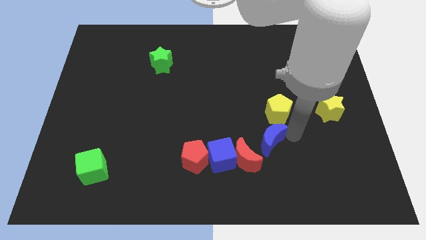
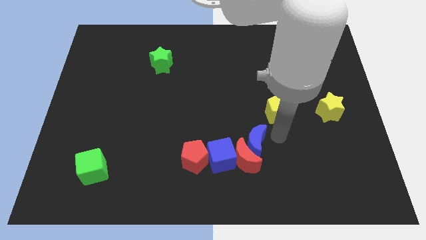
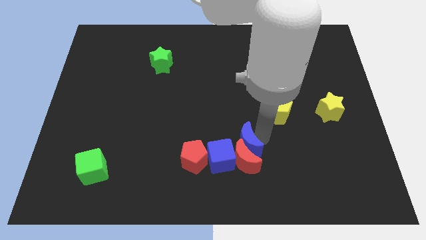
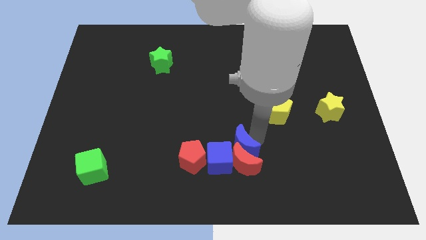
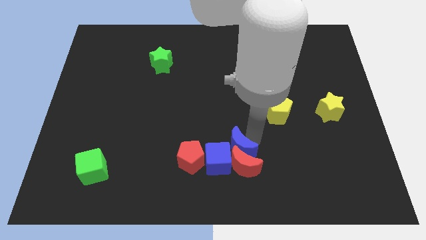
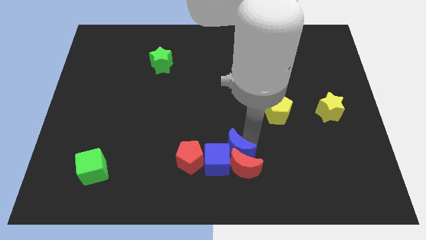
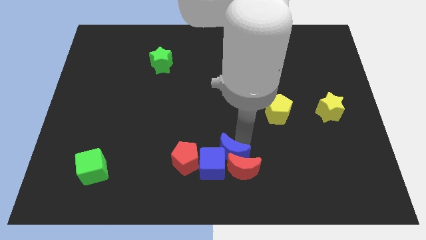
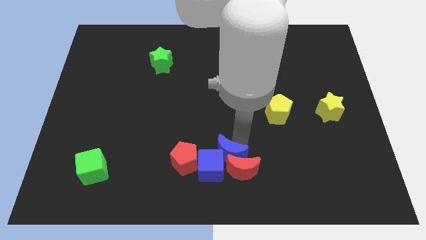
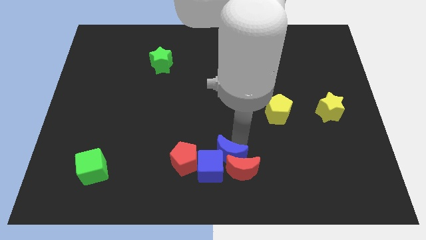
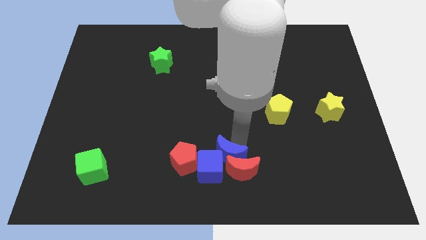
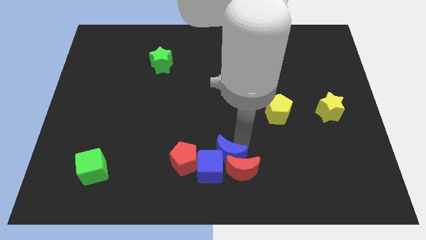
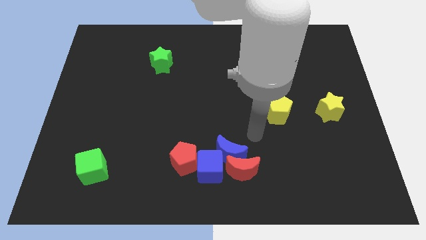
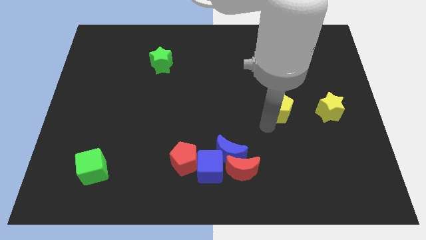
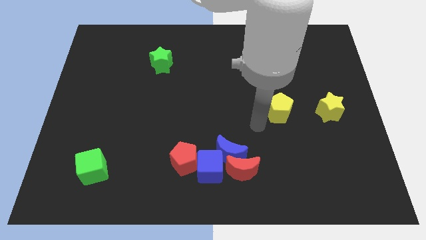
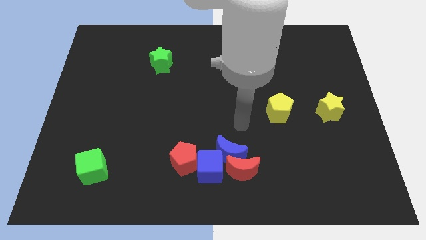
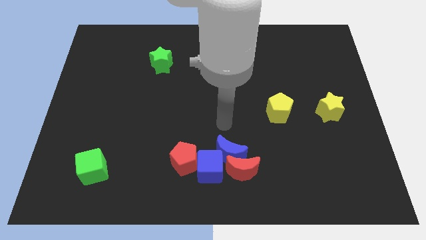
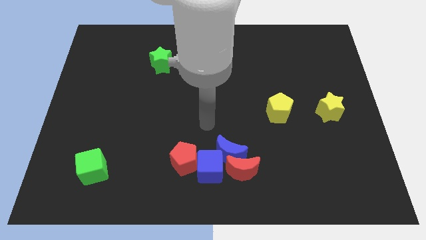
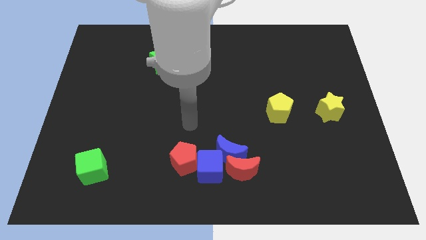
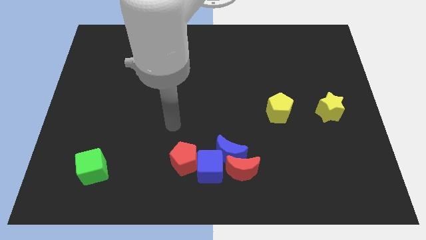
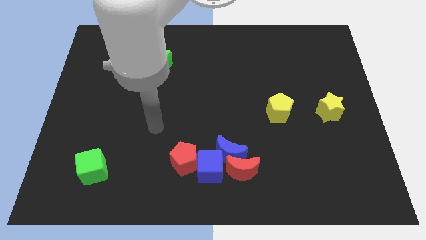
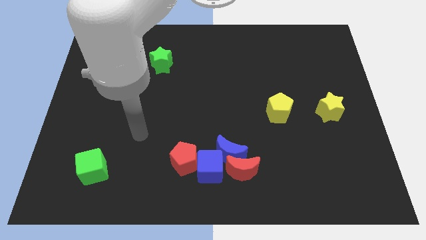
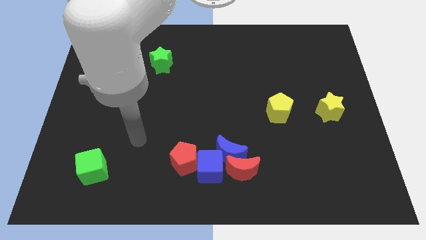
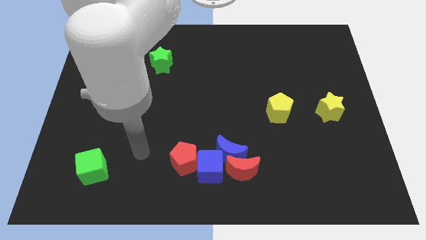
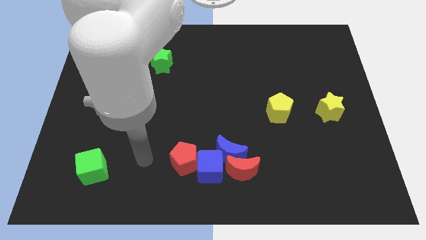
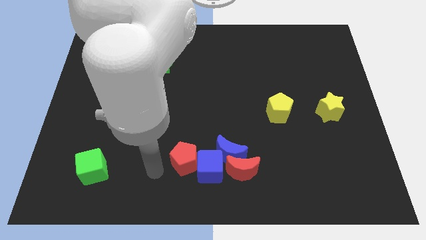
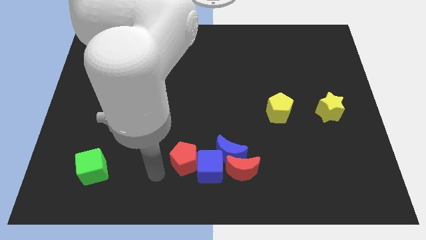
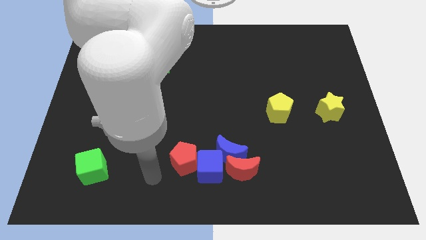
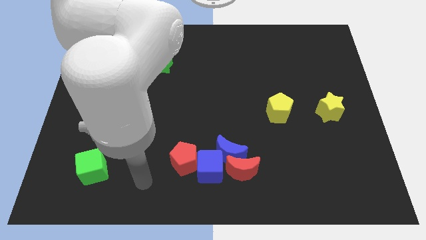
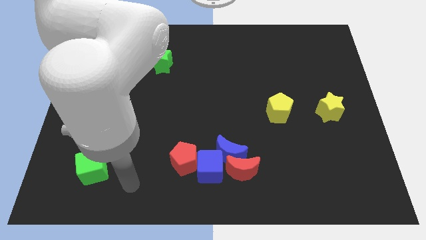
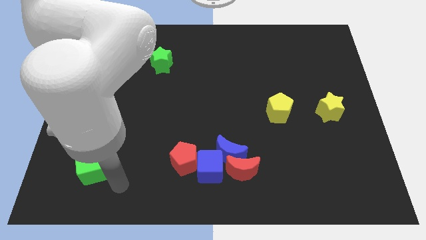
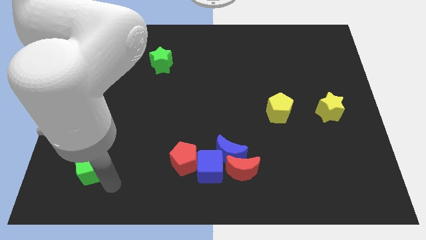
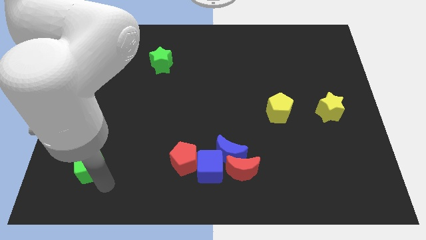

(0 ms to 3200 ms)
push the blue crescent into the red moon and blue cube

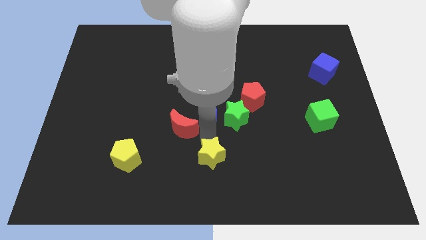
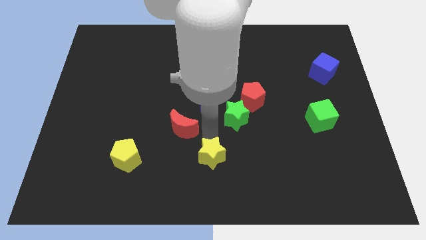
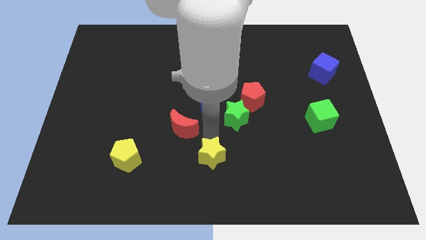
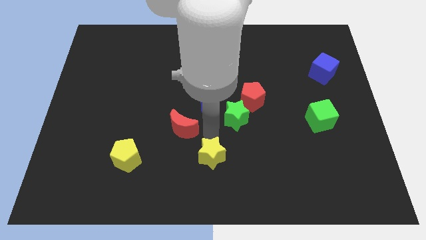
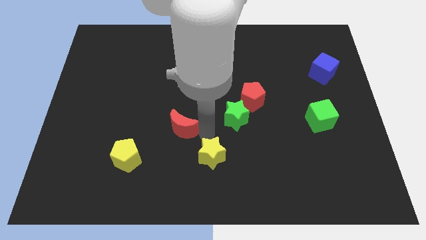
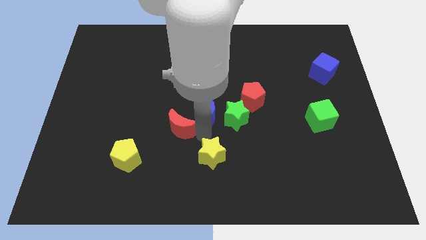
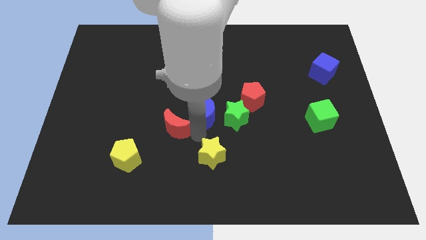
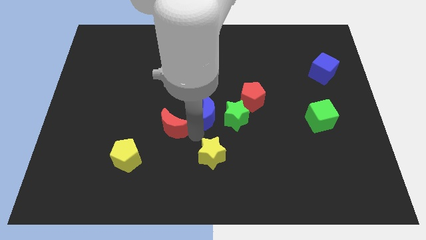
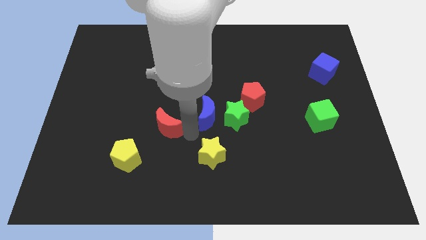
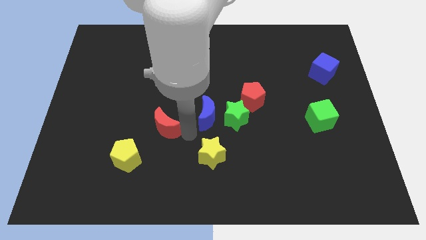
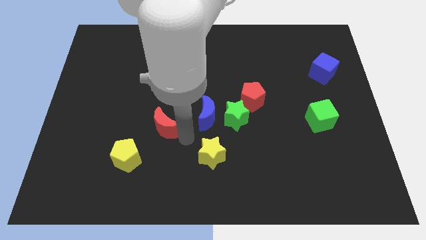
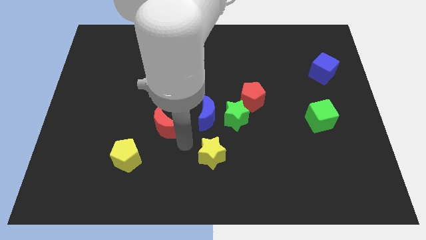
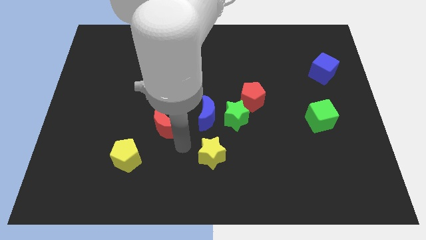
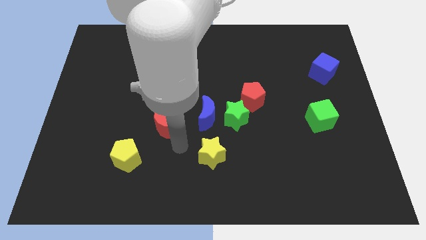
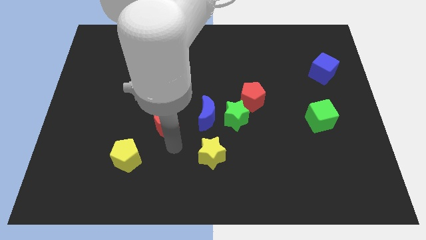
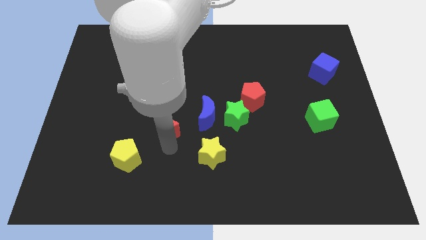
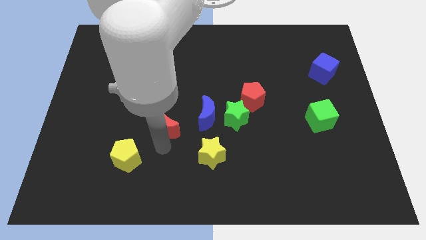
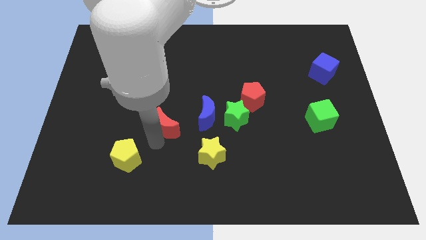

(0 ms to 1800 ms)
move the arm away form the yellow star

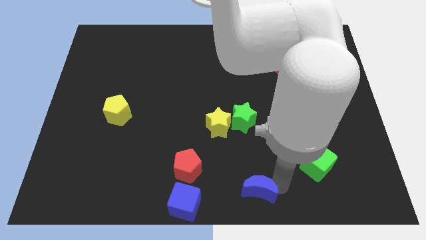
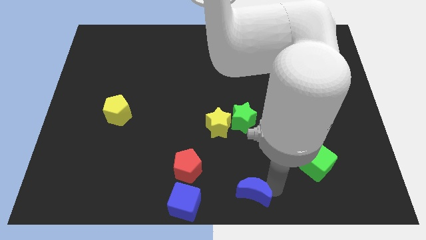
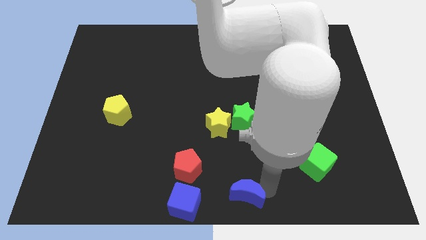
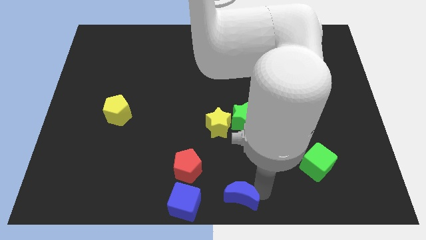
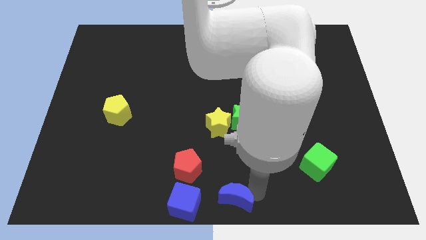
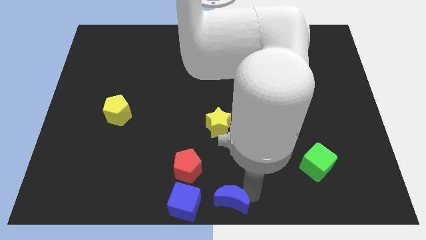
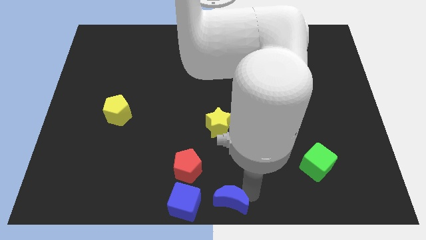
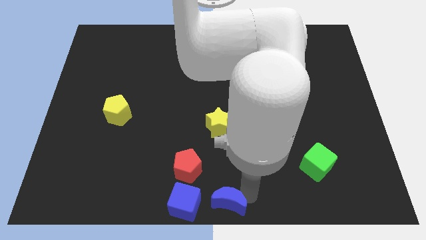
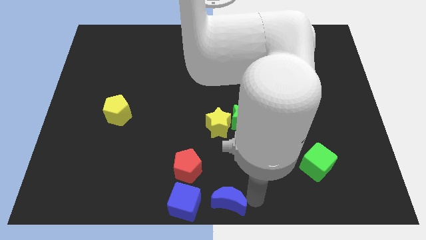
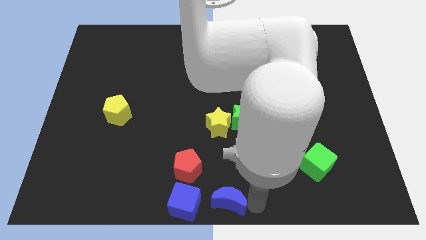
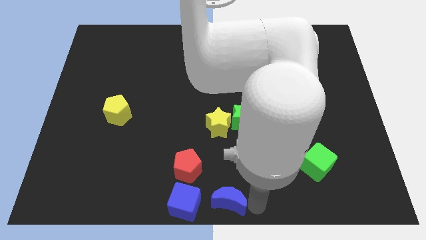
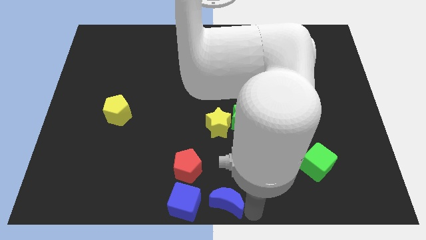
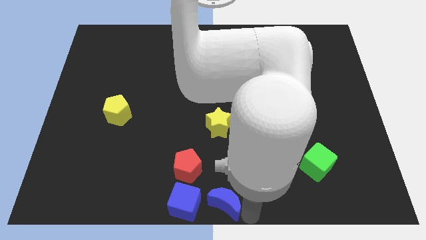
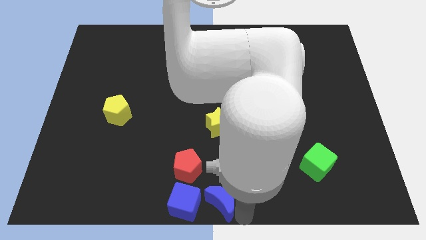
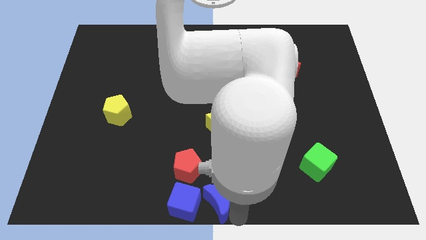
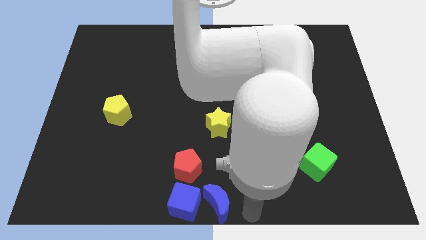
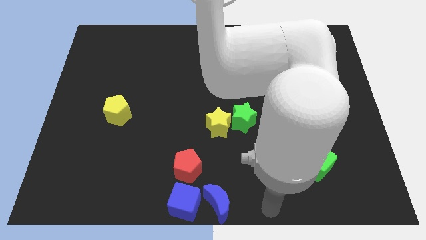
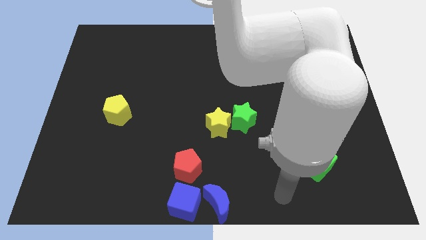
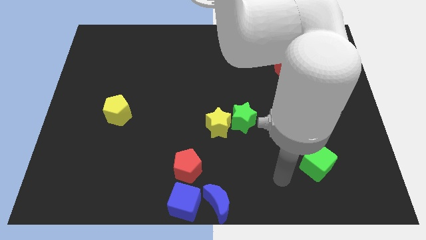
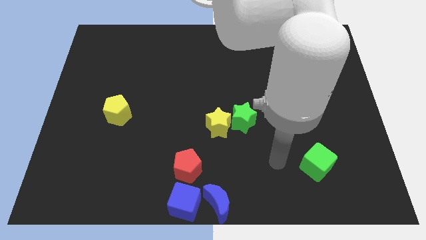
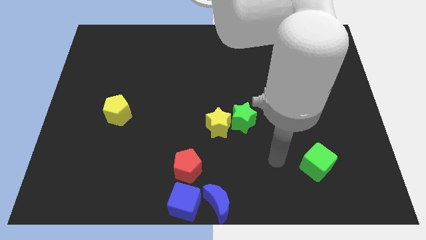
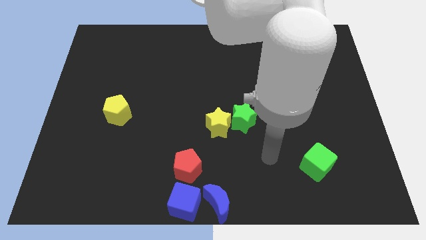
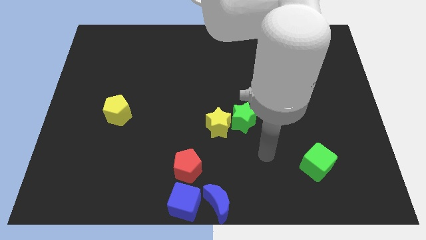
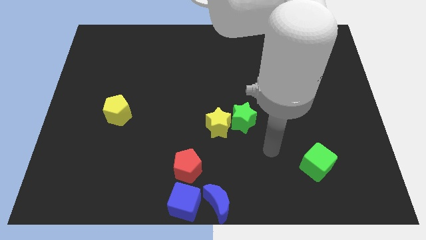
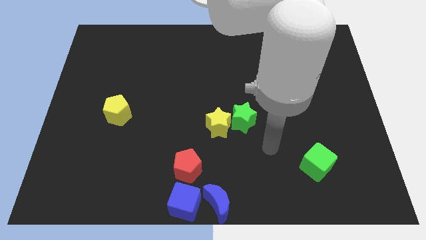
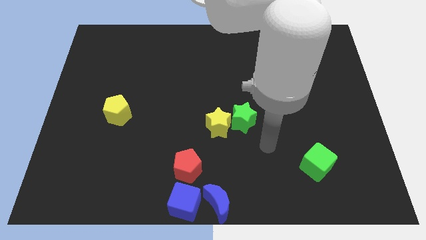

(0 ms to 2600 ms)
push the blue crescent to the bottom center

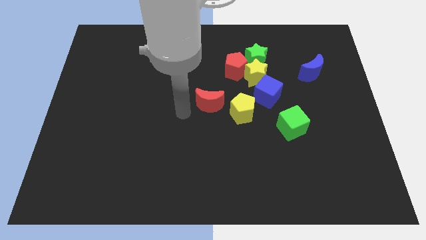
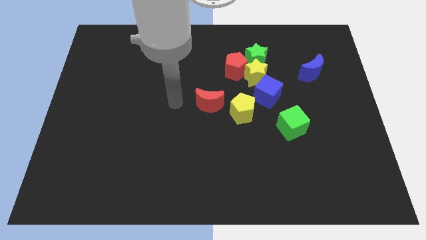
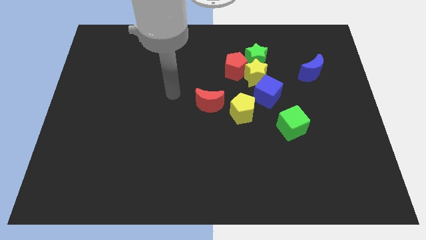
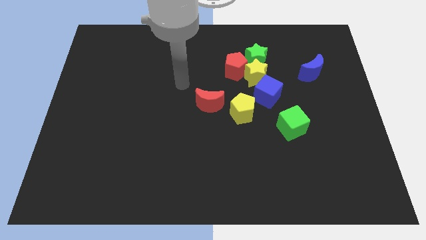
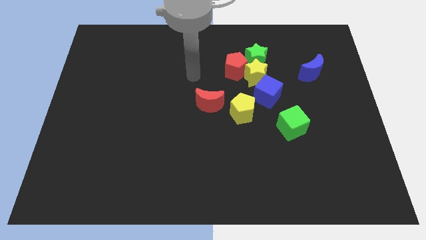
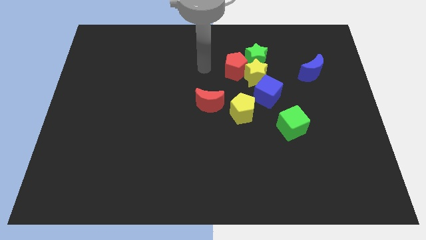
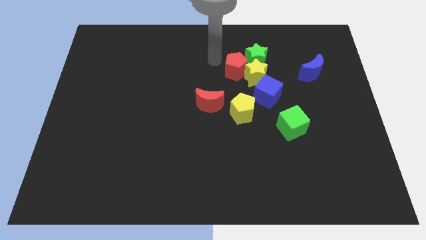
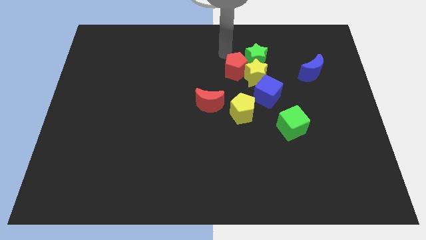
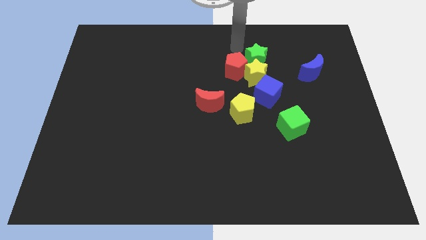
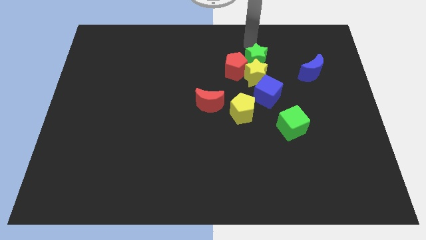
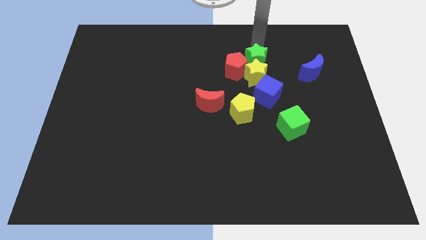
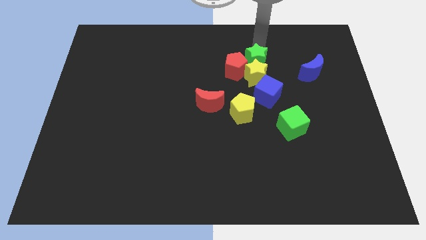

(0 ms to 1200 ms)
move your arm towards the green star

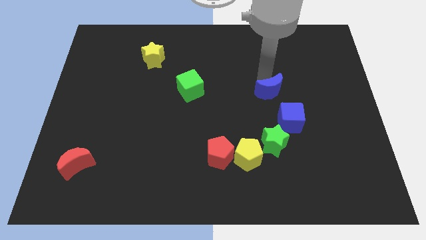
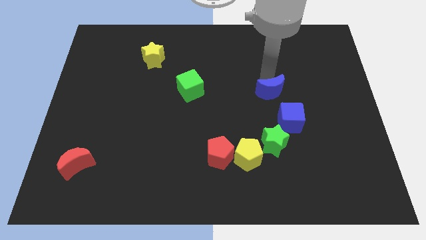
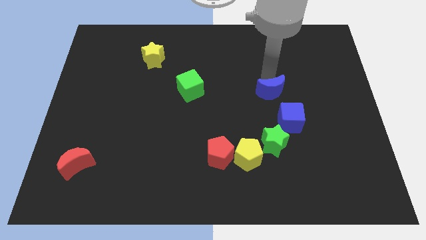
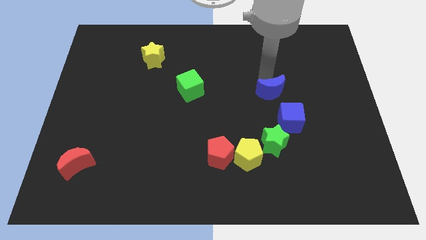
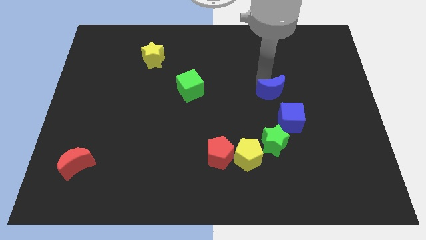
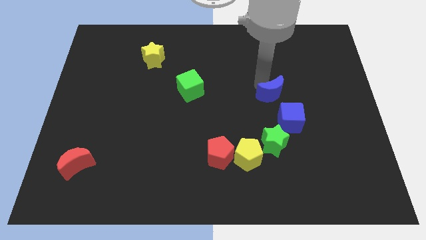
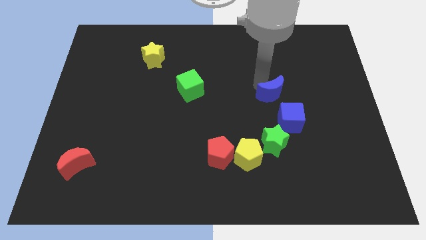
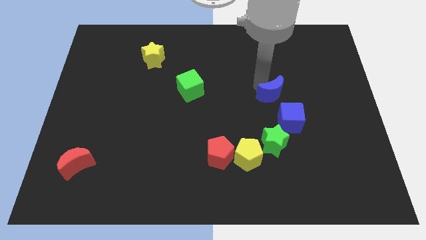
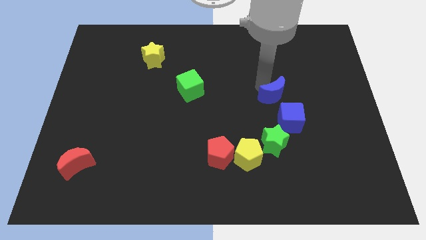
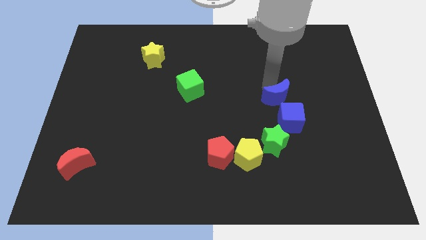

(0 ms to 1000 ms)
push the blue crescent towards the blue cube
